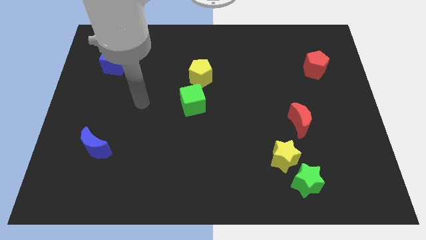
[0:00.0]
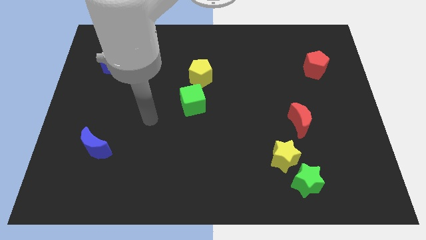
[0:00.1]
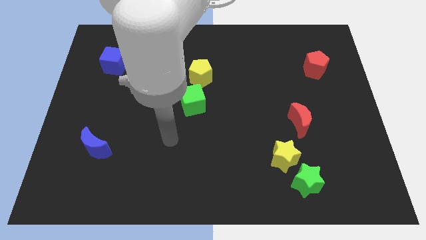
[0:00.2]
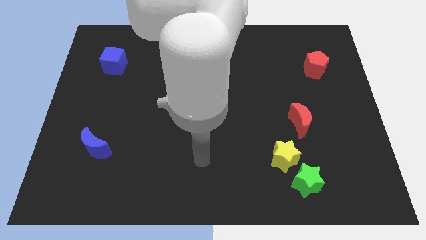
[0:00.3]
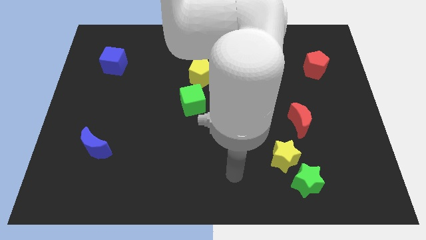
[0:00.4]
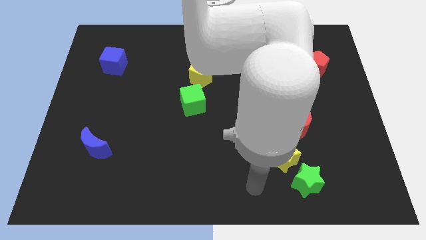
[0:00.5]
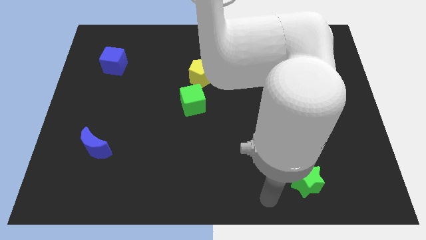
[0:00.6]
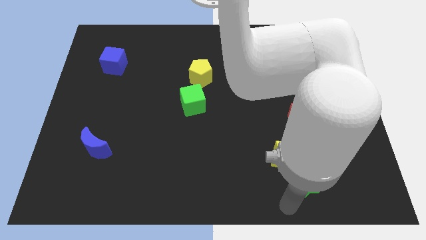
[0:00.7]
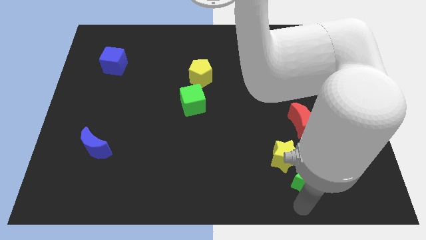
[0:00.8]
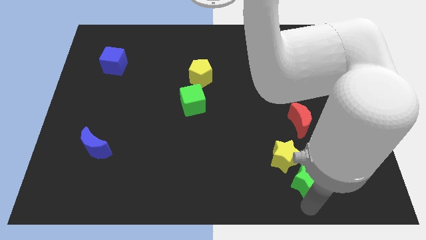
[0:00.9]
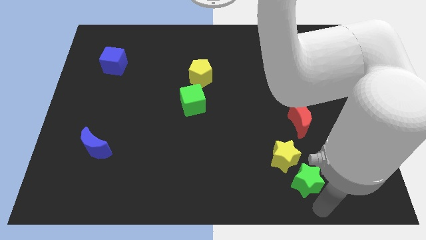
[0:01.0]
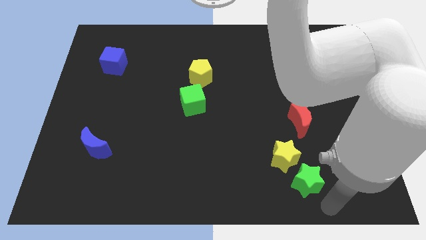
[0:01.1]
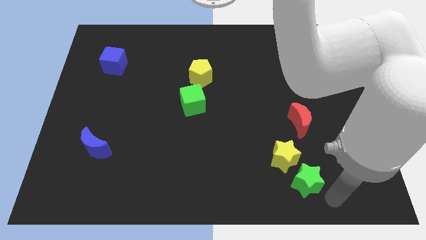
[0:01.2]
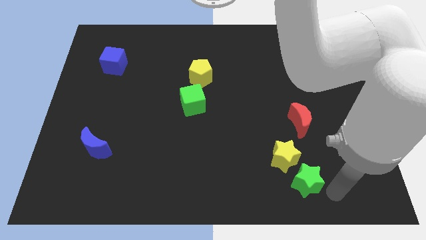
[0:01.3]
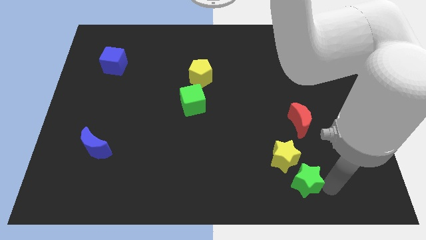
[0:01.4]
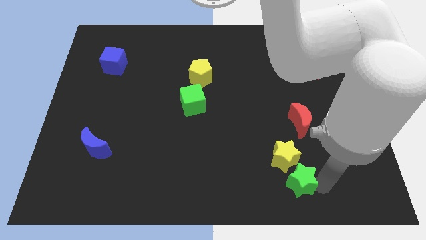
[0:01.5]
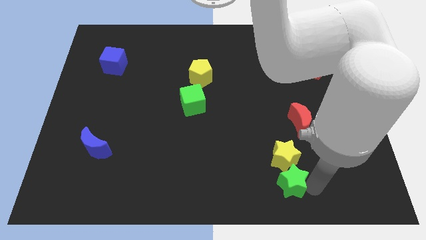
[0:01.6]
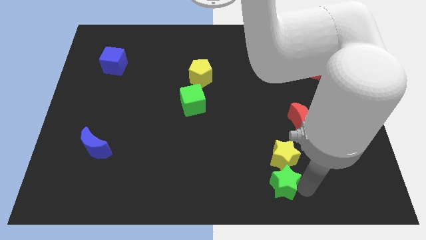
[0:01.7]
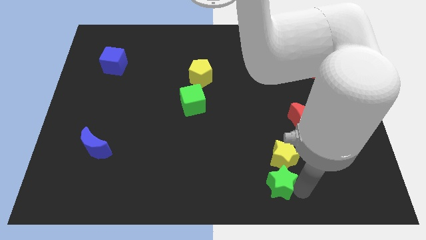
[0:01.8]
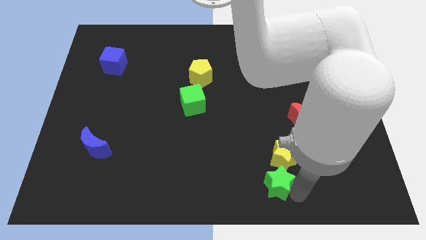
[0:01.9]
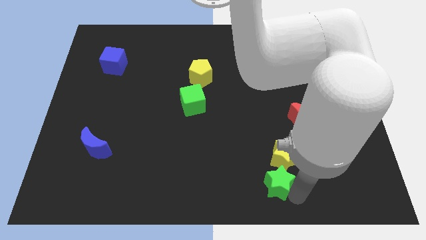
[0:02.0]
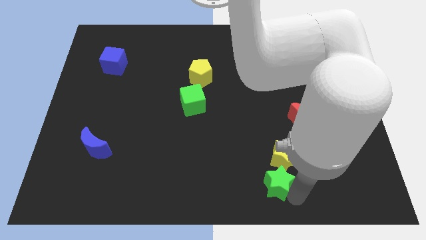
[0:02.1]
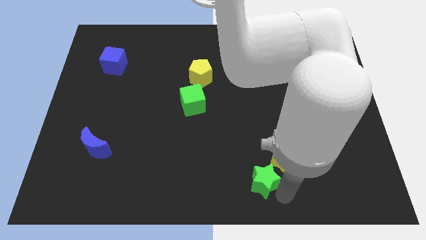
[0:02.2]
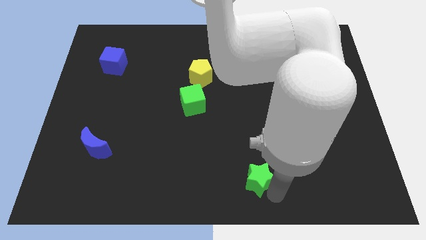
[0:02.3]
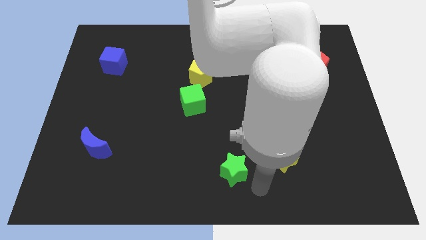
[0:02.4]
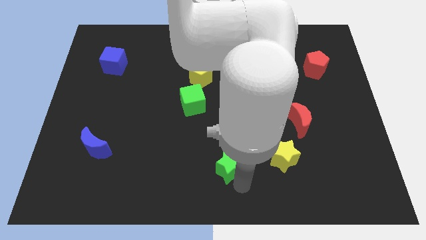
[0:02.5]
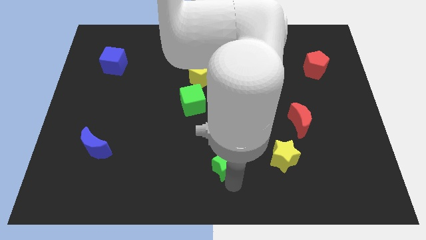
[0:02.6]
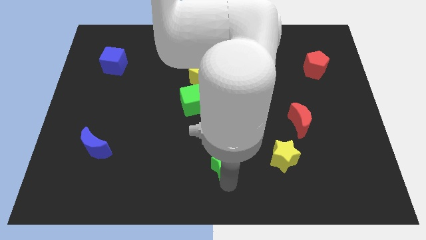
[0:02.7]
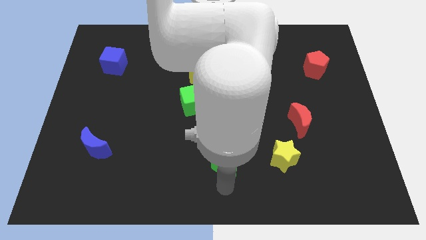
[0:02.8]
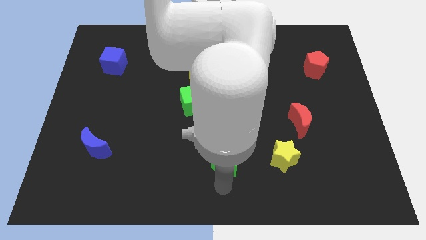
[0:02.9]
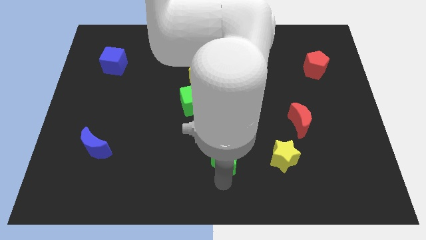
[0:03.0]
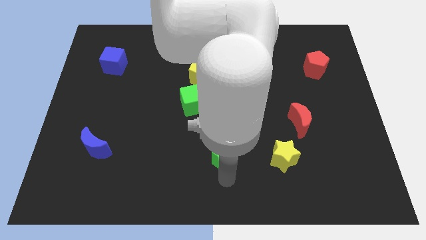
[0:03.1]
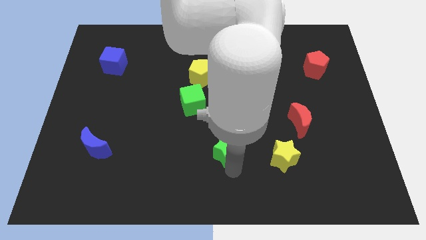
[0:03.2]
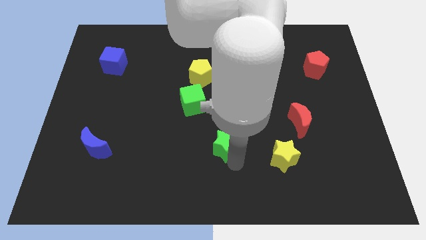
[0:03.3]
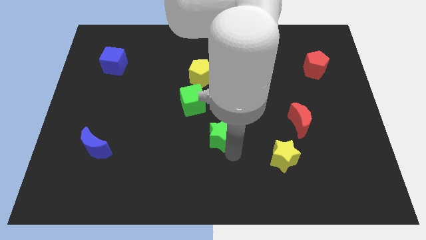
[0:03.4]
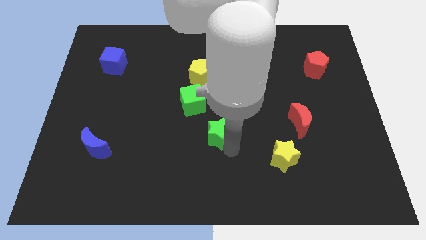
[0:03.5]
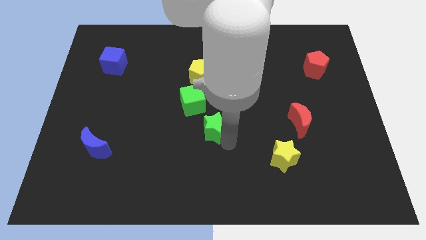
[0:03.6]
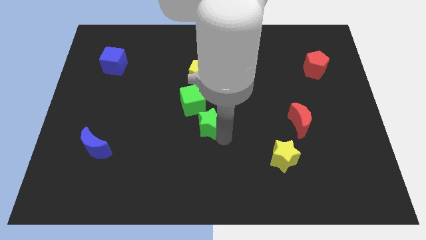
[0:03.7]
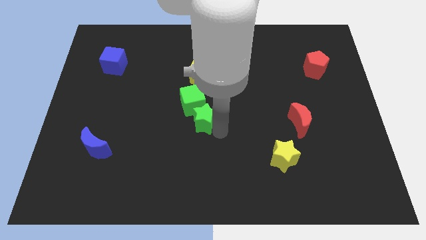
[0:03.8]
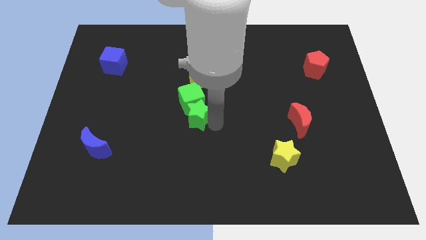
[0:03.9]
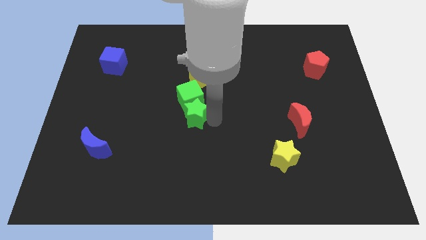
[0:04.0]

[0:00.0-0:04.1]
push the green star to the green cube

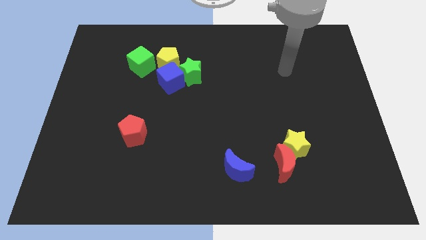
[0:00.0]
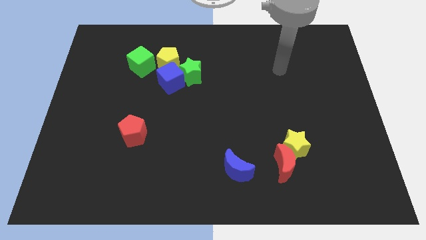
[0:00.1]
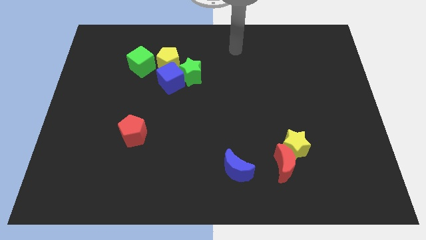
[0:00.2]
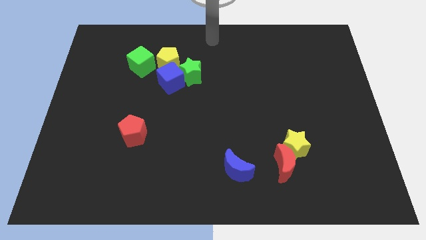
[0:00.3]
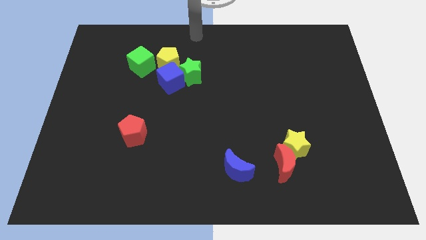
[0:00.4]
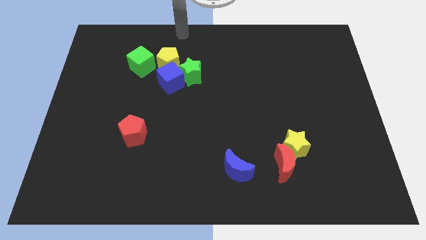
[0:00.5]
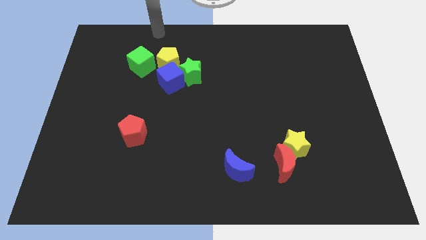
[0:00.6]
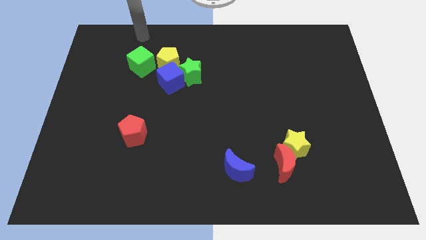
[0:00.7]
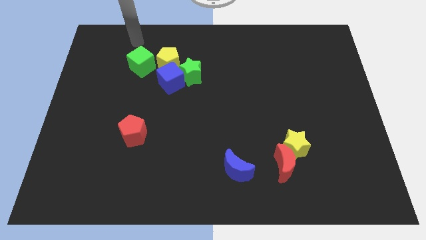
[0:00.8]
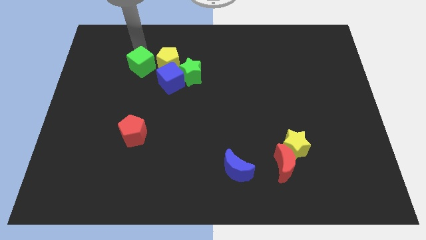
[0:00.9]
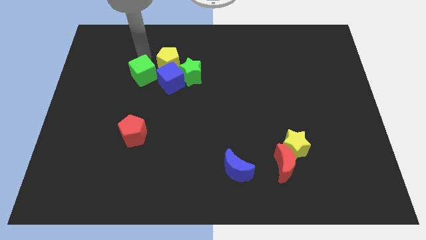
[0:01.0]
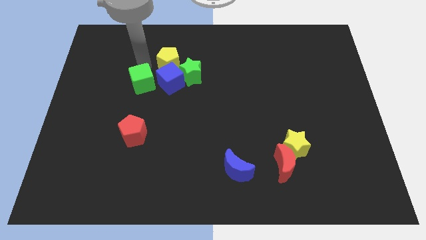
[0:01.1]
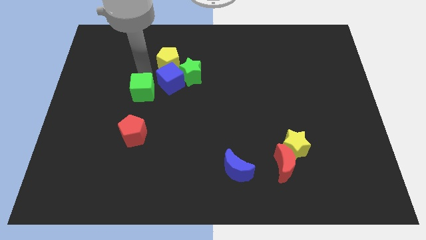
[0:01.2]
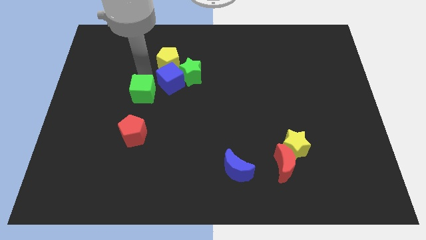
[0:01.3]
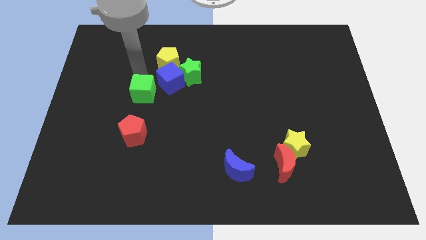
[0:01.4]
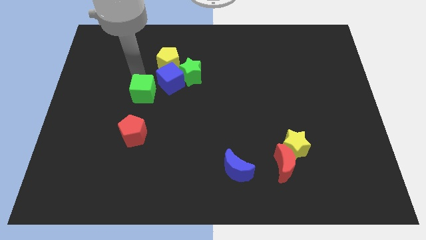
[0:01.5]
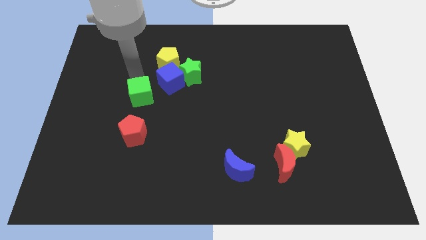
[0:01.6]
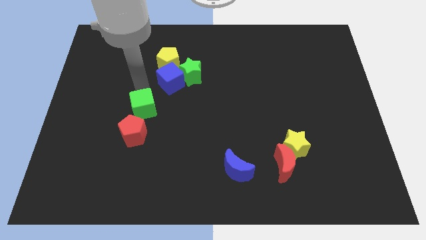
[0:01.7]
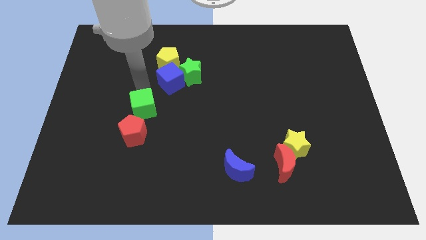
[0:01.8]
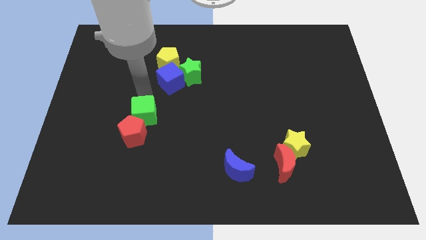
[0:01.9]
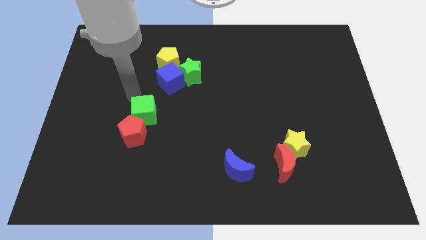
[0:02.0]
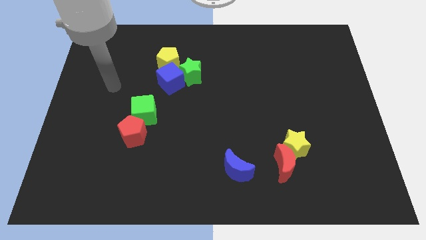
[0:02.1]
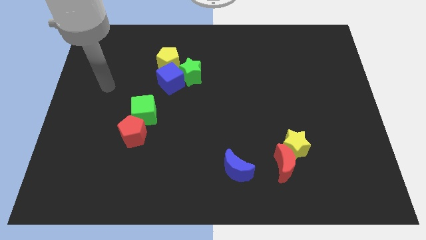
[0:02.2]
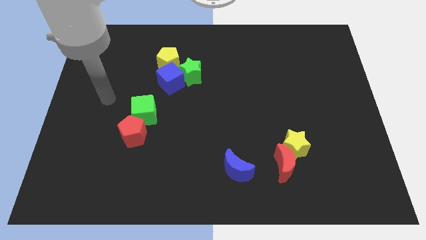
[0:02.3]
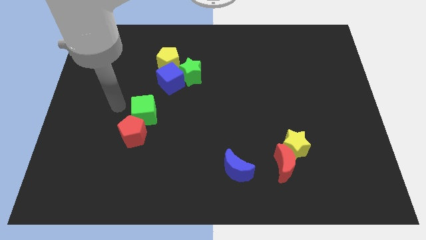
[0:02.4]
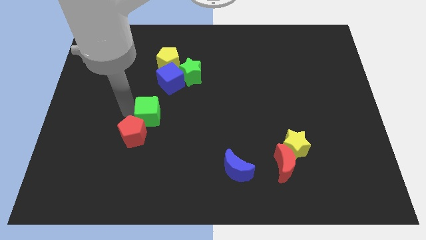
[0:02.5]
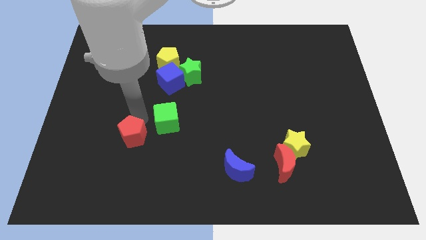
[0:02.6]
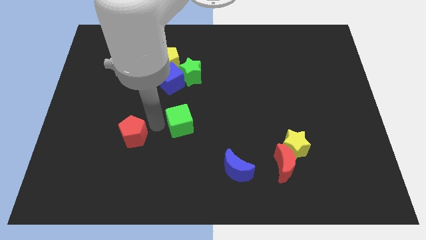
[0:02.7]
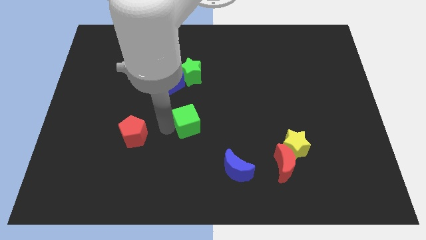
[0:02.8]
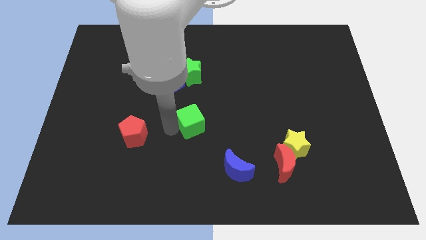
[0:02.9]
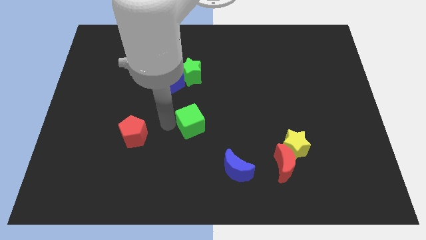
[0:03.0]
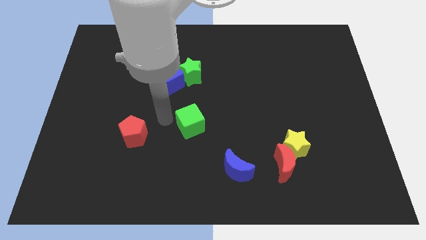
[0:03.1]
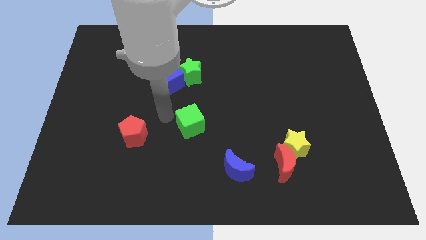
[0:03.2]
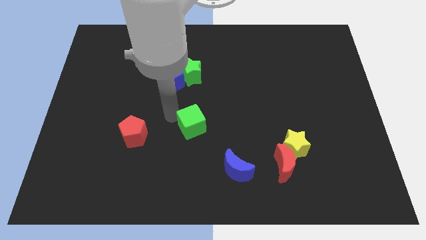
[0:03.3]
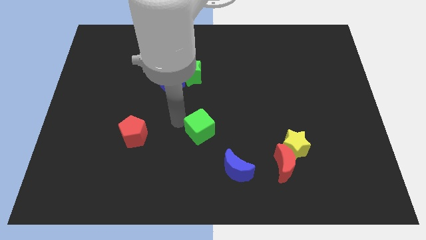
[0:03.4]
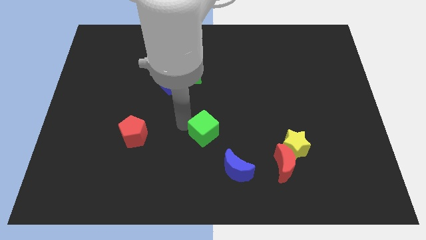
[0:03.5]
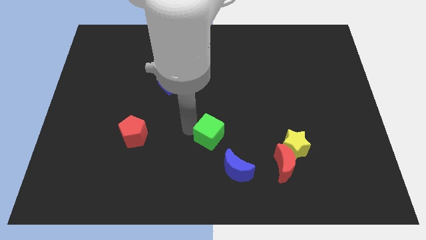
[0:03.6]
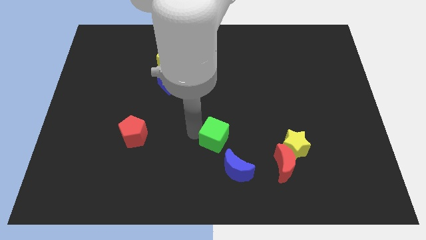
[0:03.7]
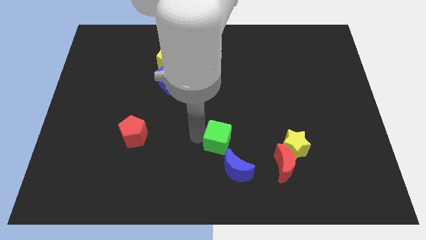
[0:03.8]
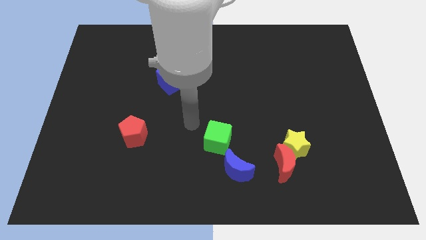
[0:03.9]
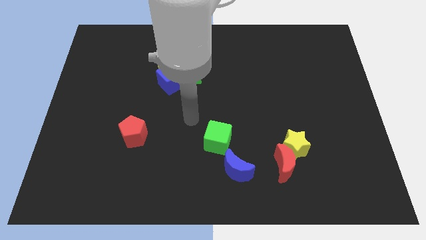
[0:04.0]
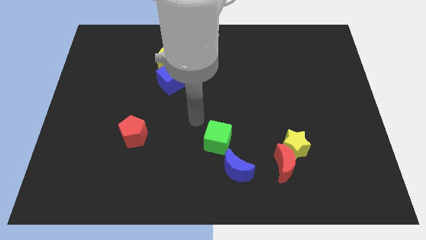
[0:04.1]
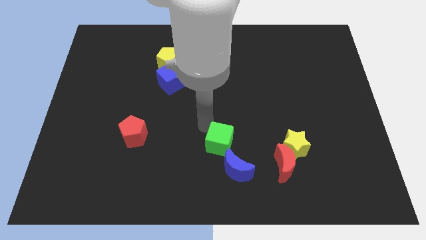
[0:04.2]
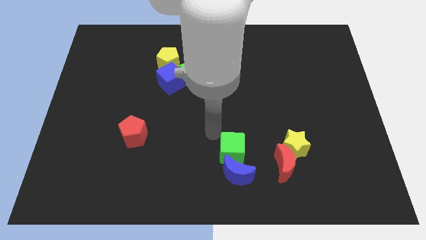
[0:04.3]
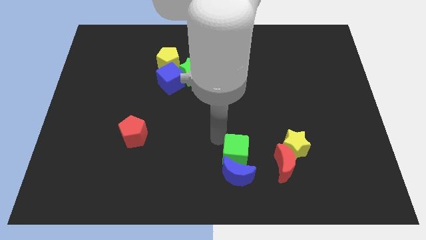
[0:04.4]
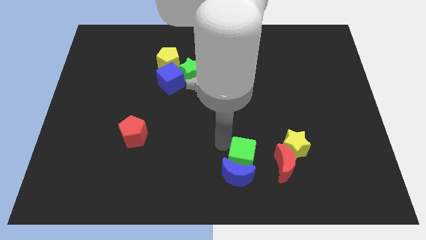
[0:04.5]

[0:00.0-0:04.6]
move the green cube towards the blue moon
